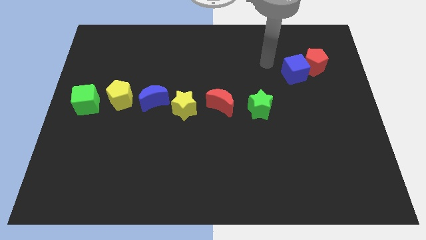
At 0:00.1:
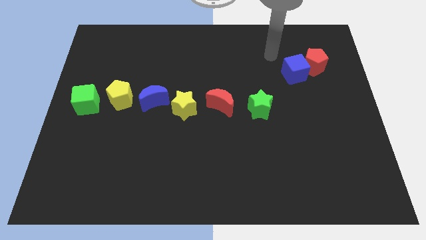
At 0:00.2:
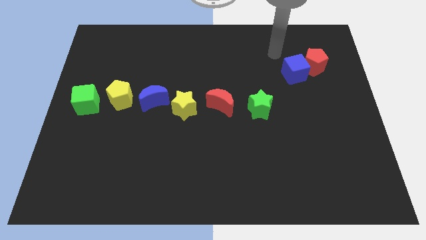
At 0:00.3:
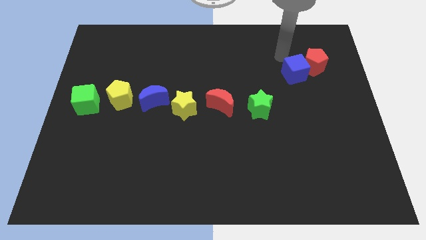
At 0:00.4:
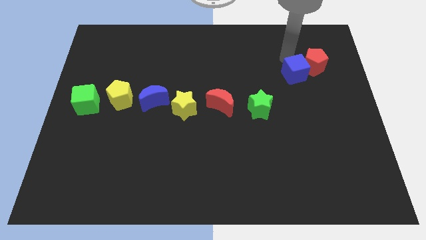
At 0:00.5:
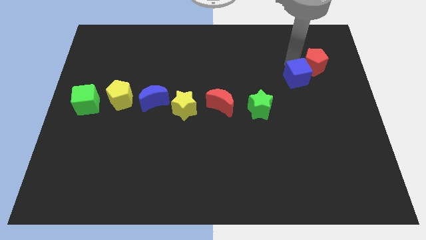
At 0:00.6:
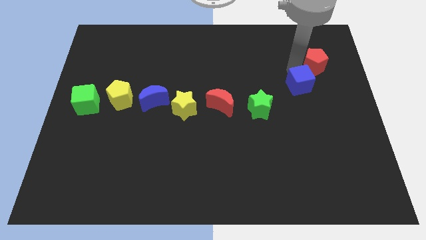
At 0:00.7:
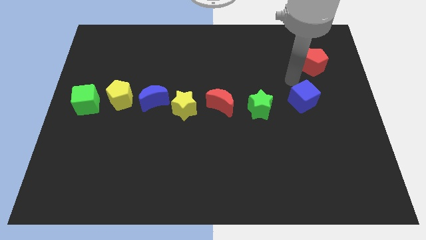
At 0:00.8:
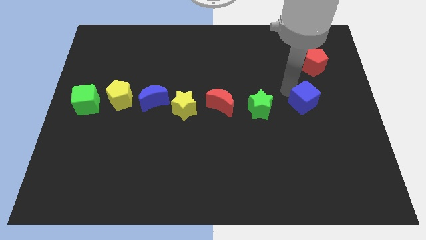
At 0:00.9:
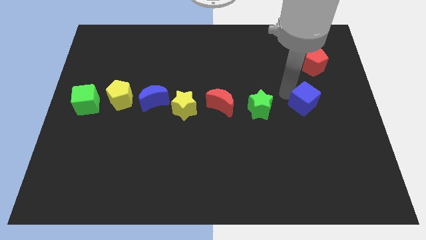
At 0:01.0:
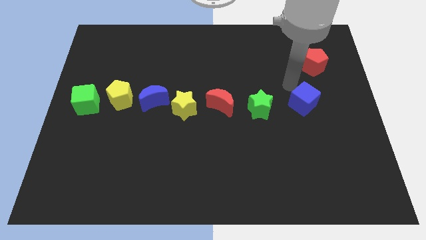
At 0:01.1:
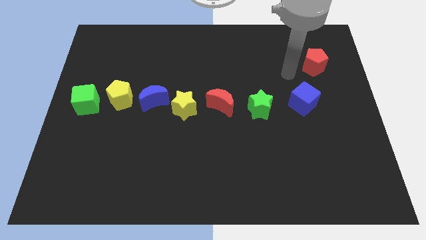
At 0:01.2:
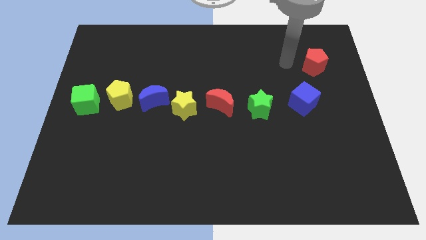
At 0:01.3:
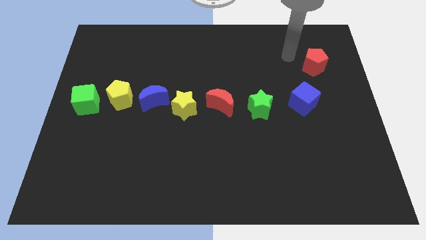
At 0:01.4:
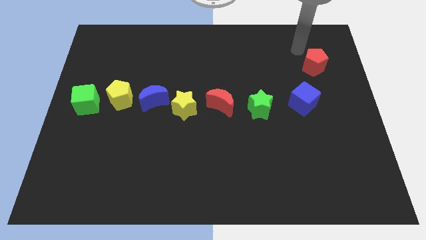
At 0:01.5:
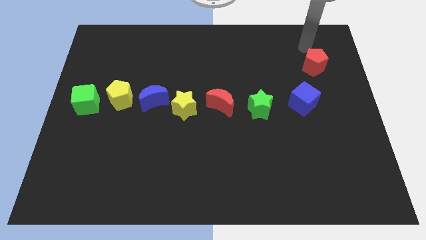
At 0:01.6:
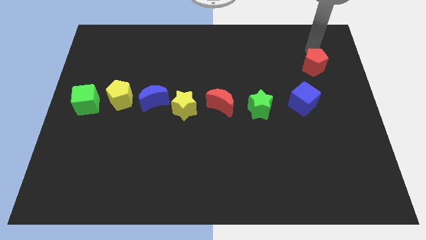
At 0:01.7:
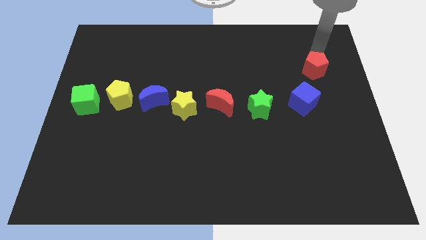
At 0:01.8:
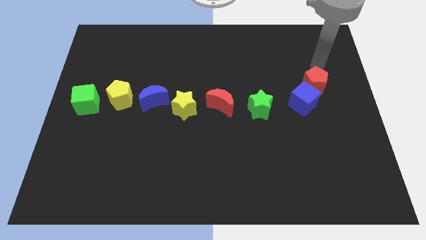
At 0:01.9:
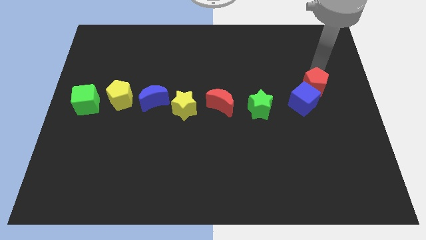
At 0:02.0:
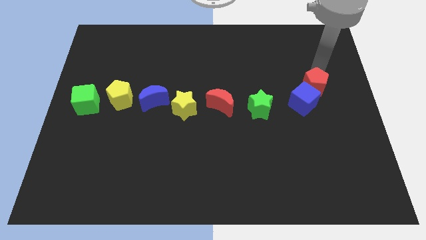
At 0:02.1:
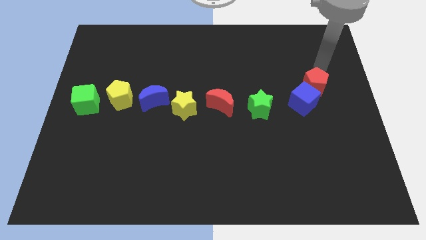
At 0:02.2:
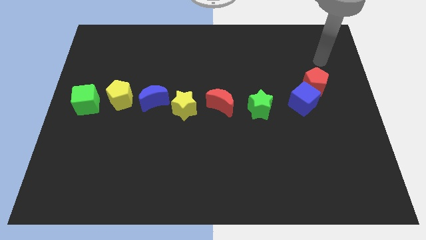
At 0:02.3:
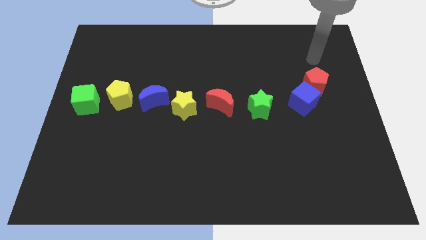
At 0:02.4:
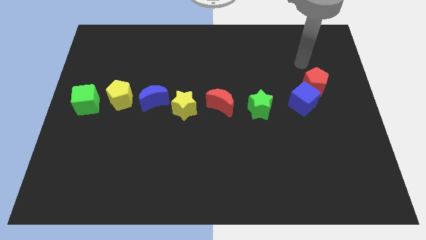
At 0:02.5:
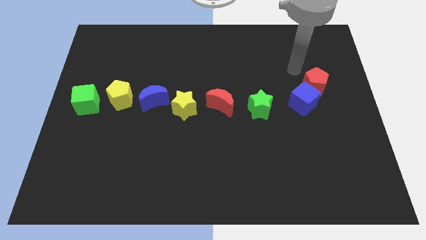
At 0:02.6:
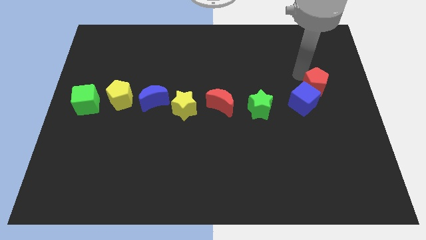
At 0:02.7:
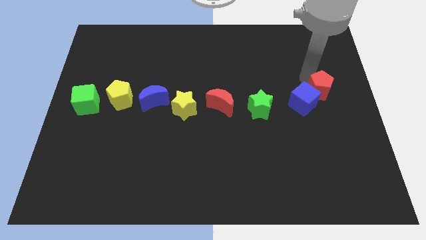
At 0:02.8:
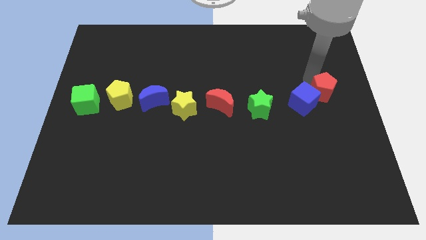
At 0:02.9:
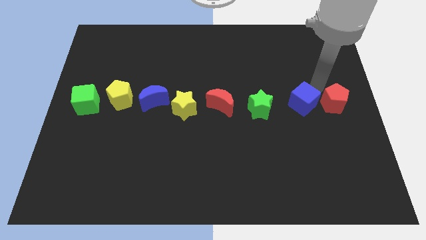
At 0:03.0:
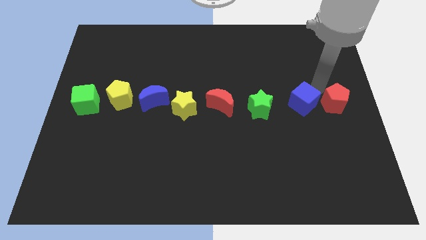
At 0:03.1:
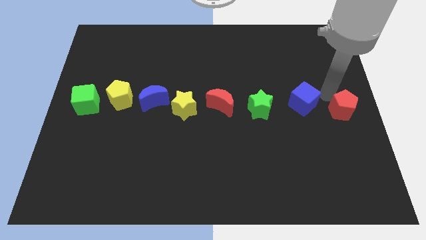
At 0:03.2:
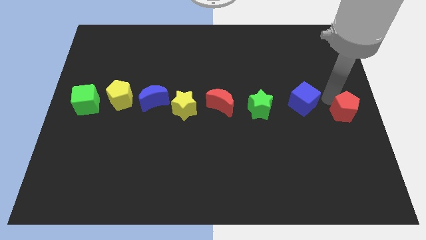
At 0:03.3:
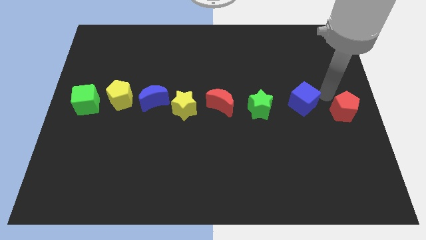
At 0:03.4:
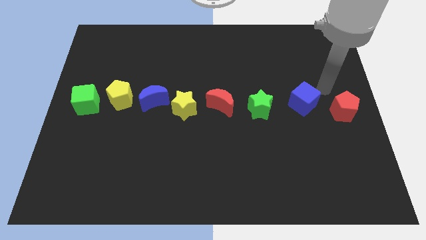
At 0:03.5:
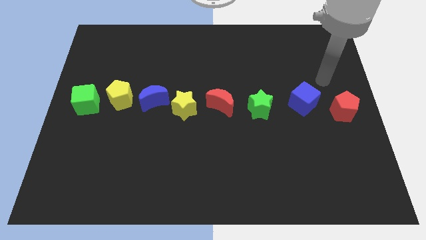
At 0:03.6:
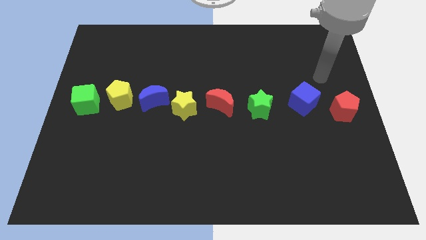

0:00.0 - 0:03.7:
place the red pentagon right to the blue cube

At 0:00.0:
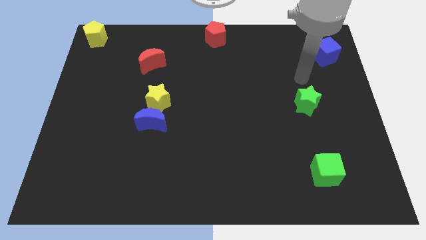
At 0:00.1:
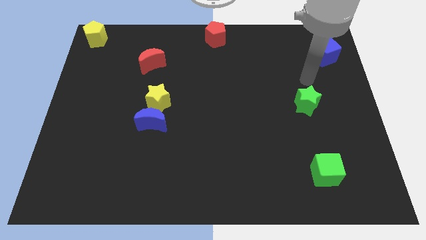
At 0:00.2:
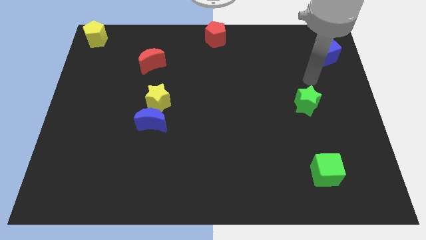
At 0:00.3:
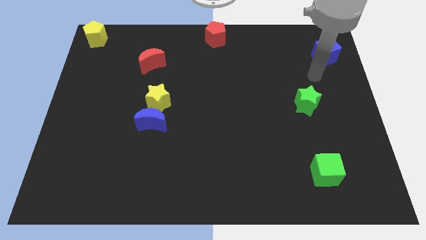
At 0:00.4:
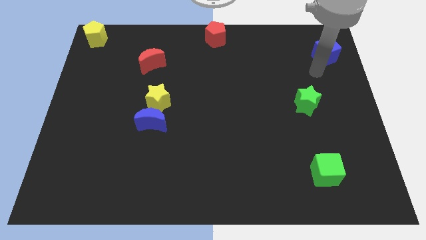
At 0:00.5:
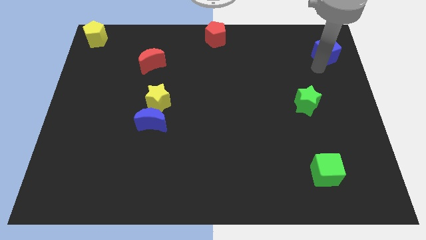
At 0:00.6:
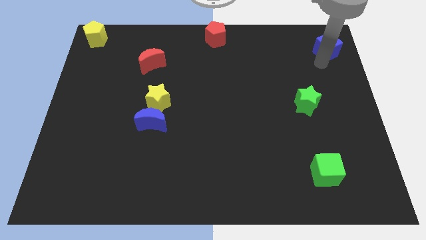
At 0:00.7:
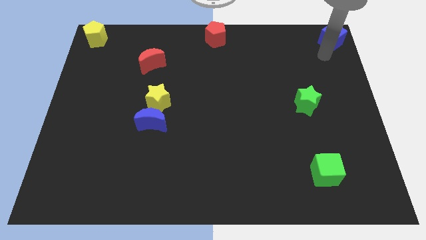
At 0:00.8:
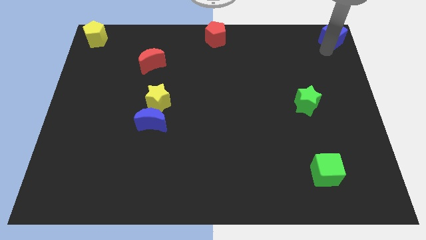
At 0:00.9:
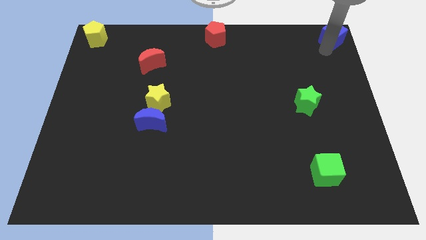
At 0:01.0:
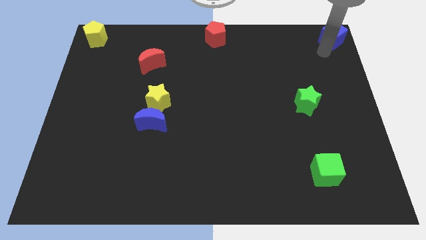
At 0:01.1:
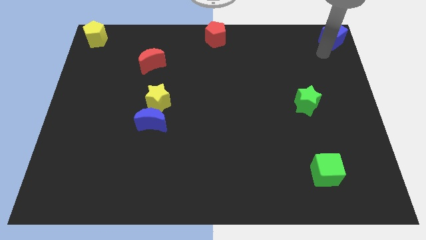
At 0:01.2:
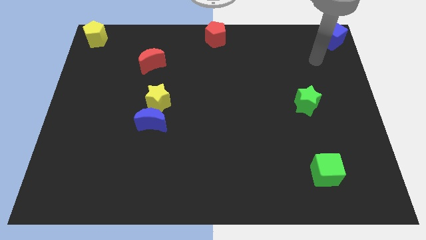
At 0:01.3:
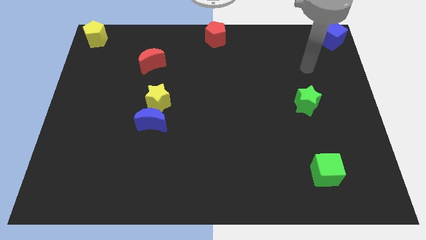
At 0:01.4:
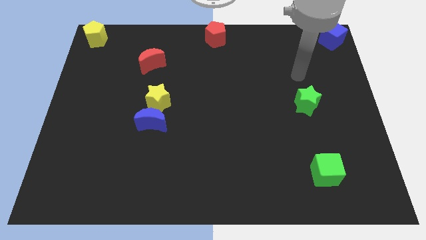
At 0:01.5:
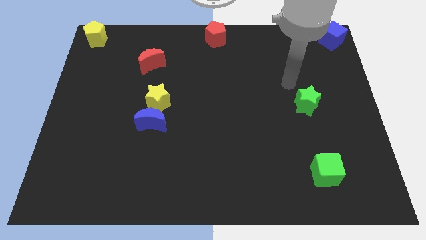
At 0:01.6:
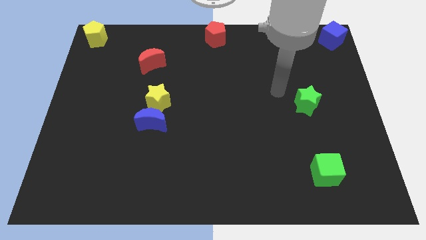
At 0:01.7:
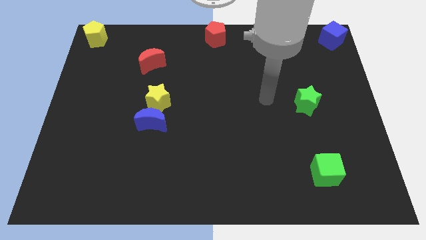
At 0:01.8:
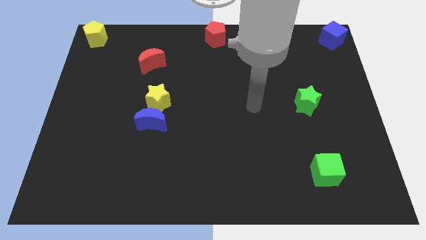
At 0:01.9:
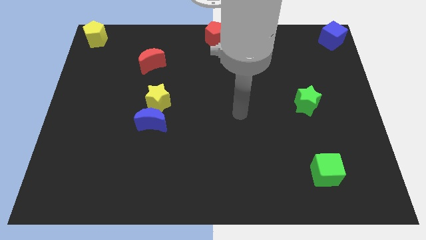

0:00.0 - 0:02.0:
move the blue cube to the top right corner of the board

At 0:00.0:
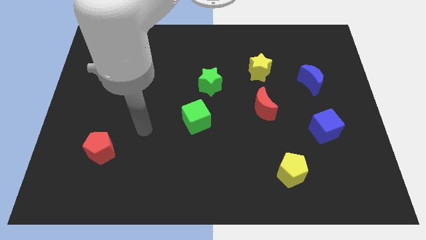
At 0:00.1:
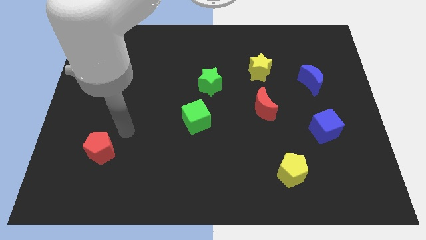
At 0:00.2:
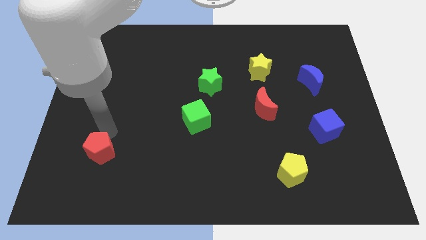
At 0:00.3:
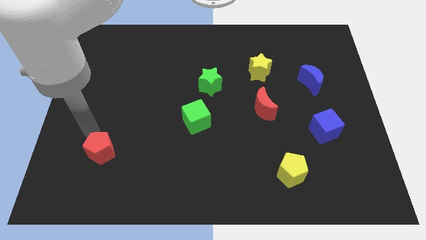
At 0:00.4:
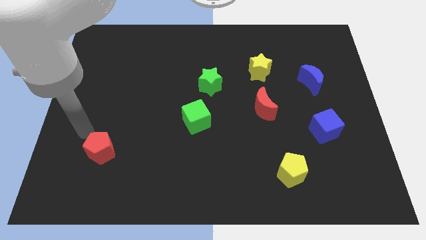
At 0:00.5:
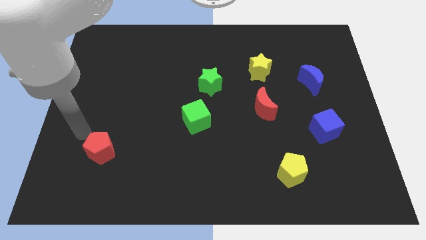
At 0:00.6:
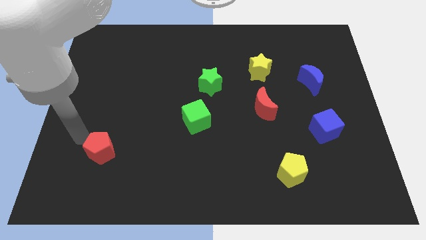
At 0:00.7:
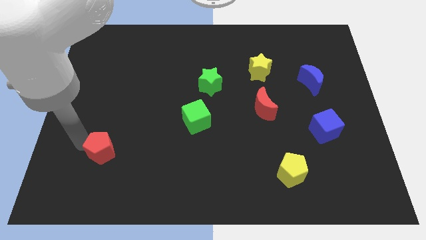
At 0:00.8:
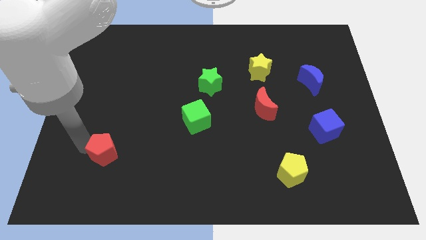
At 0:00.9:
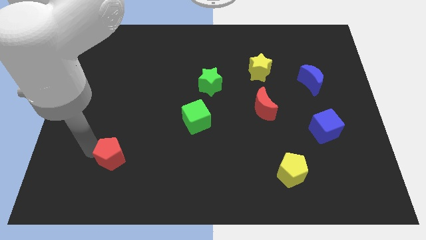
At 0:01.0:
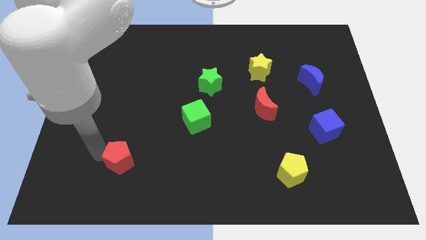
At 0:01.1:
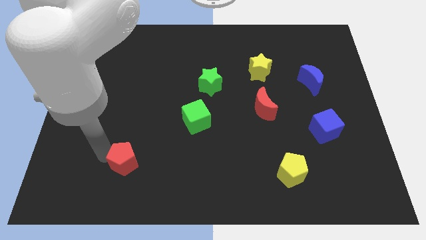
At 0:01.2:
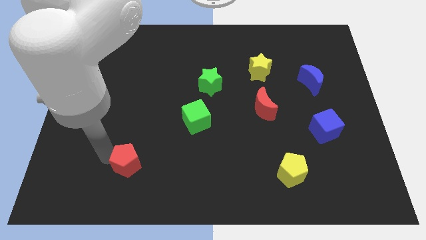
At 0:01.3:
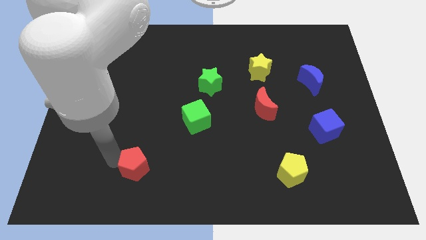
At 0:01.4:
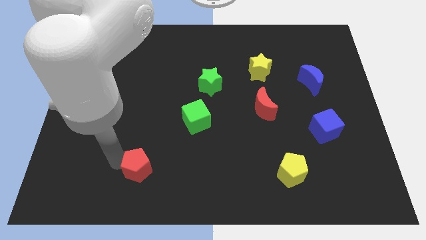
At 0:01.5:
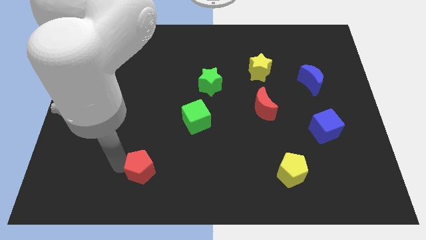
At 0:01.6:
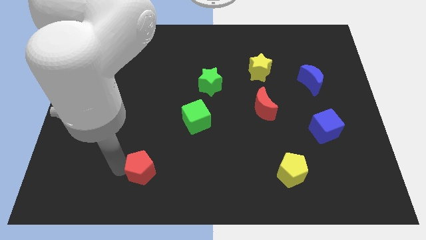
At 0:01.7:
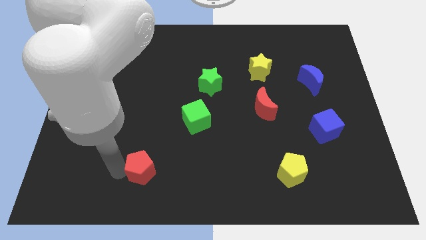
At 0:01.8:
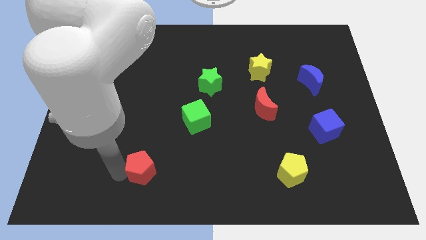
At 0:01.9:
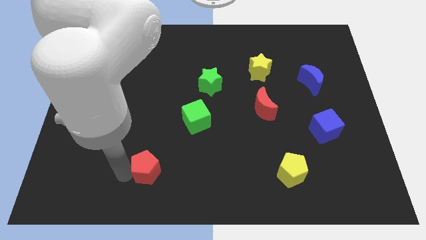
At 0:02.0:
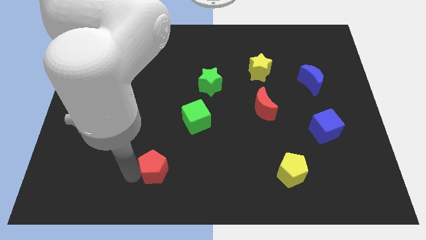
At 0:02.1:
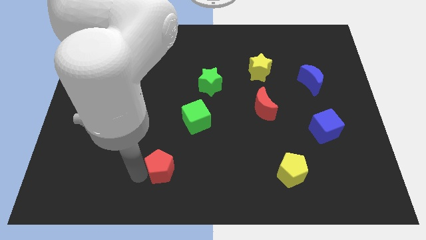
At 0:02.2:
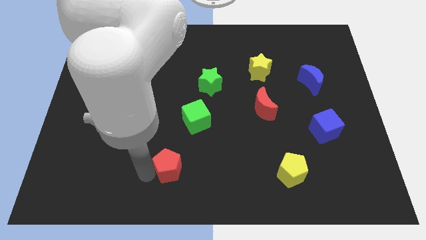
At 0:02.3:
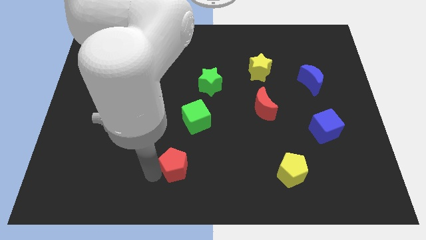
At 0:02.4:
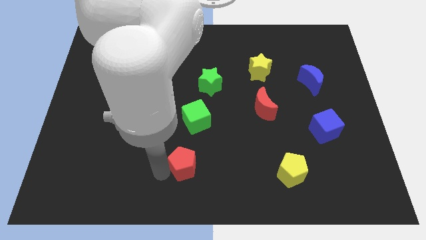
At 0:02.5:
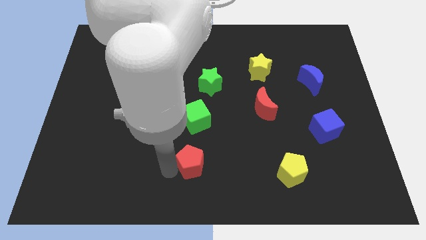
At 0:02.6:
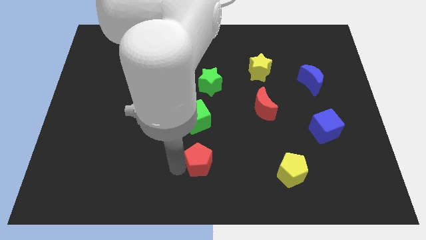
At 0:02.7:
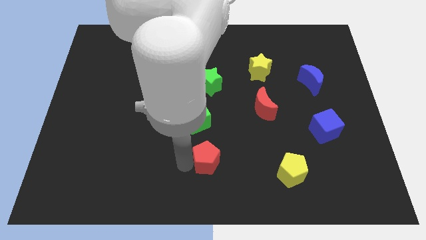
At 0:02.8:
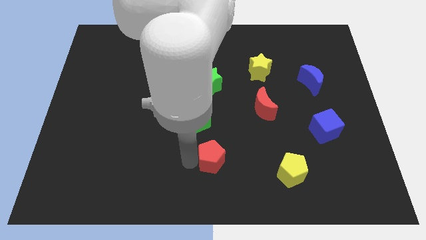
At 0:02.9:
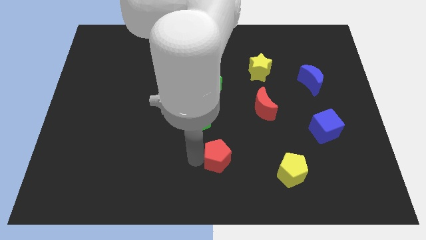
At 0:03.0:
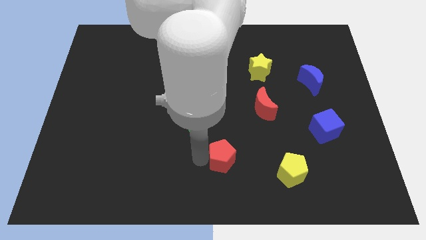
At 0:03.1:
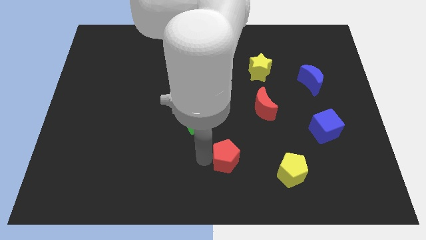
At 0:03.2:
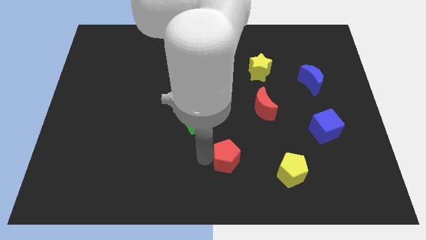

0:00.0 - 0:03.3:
push the red pentagon towards the yellow pentagon
